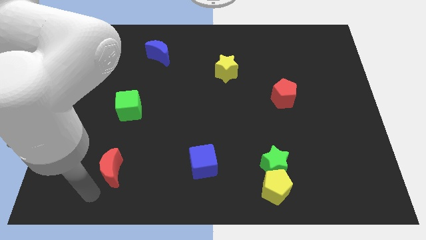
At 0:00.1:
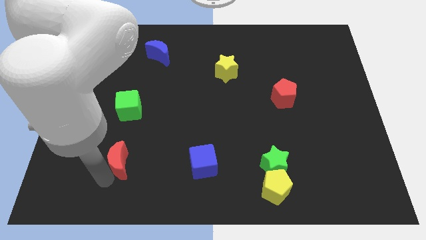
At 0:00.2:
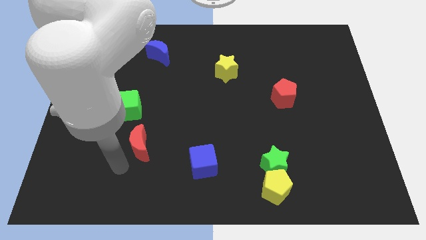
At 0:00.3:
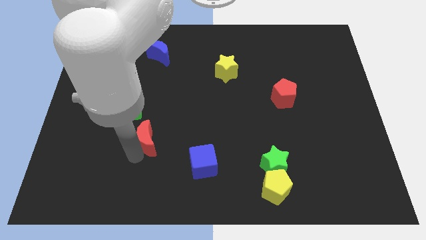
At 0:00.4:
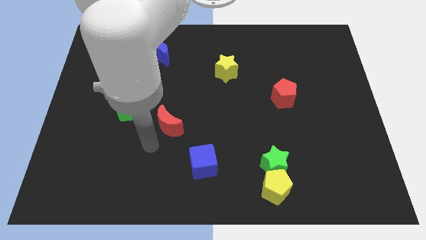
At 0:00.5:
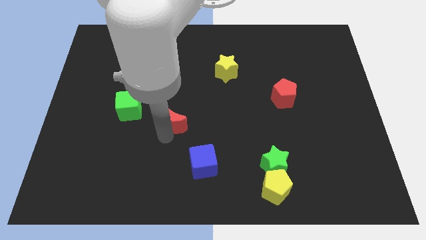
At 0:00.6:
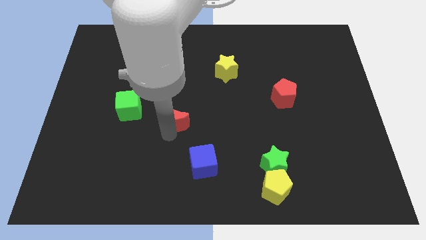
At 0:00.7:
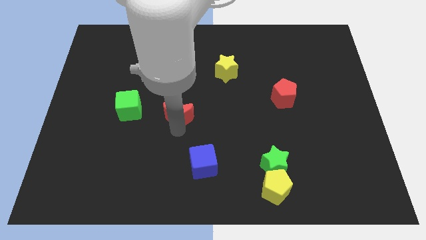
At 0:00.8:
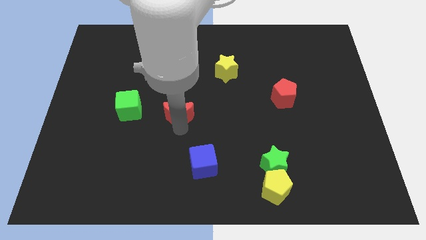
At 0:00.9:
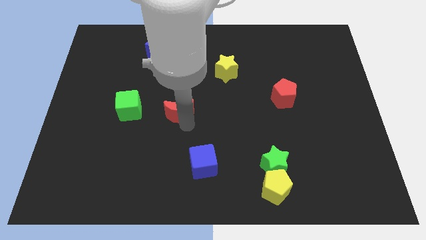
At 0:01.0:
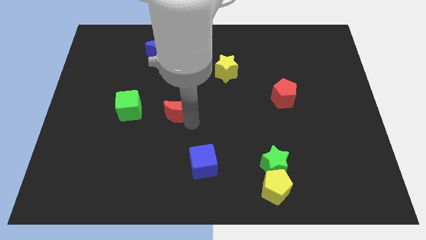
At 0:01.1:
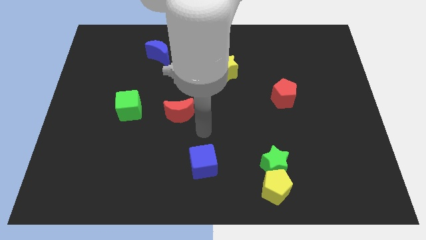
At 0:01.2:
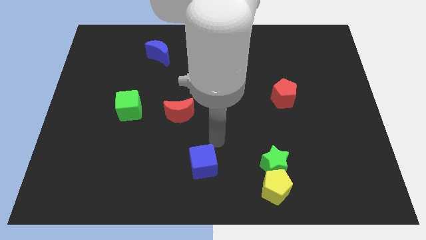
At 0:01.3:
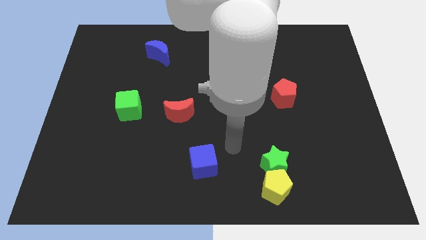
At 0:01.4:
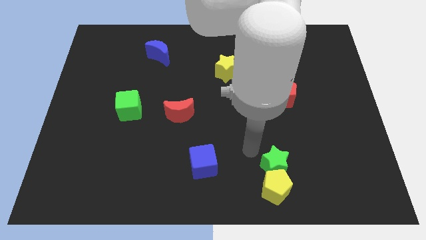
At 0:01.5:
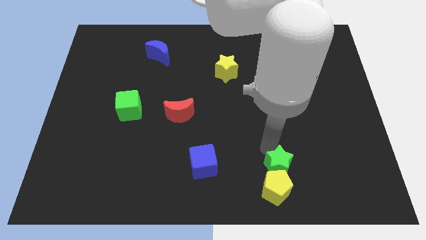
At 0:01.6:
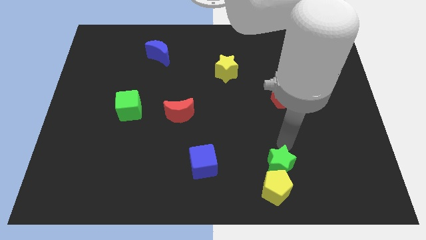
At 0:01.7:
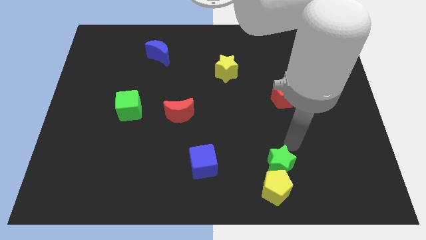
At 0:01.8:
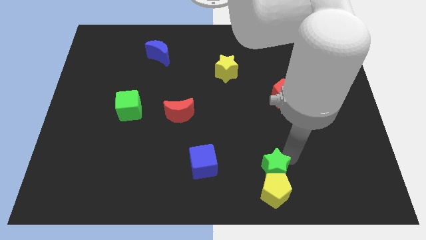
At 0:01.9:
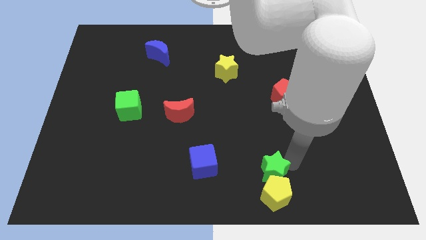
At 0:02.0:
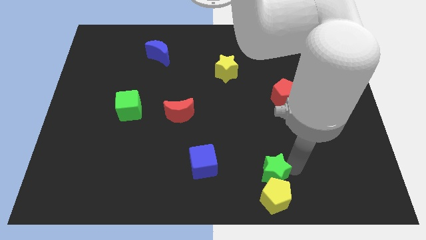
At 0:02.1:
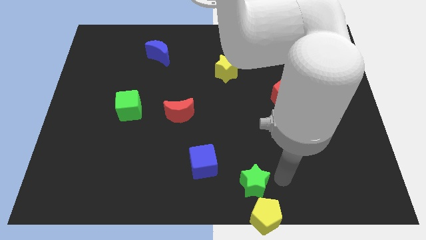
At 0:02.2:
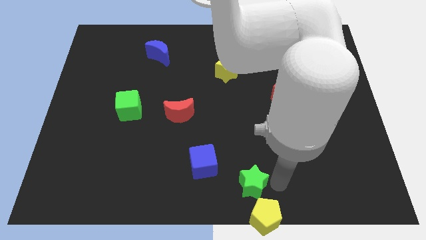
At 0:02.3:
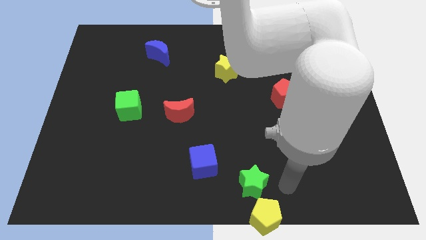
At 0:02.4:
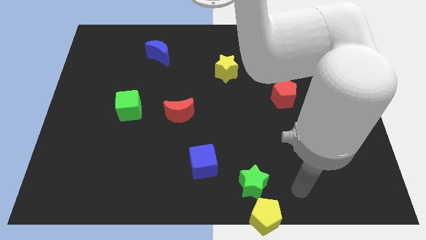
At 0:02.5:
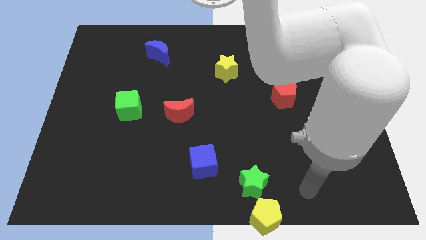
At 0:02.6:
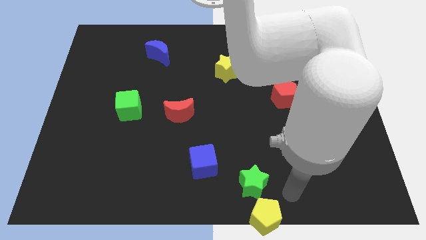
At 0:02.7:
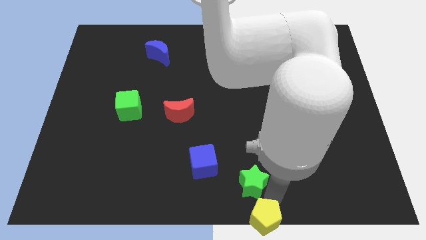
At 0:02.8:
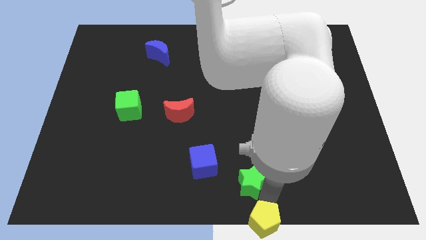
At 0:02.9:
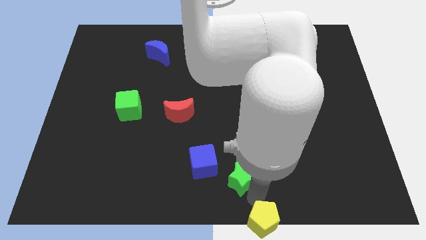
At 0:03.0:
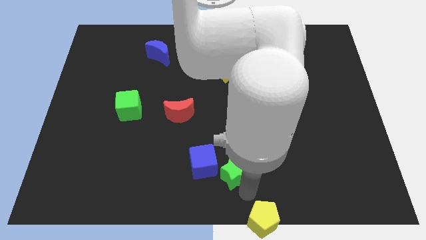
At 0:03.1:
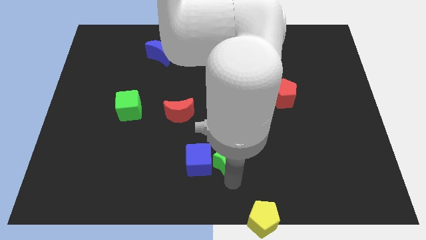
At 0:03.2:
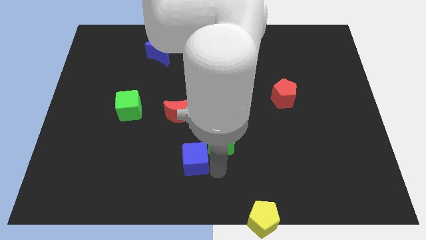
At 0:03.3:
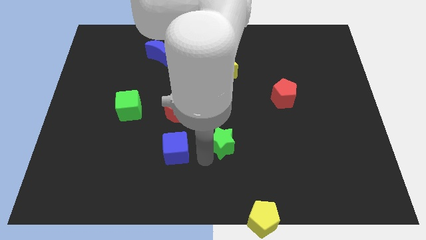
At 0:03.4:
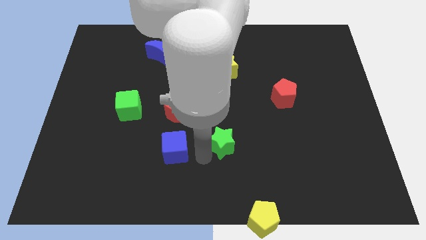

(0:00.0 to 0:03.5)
separate green star and yellow pentagon

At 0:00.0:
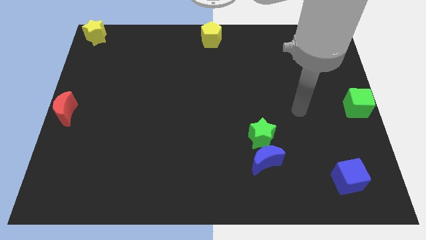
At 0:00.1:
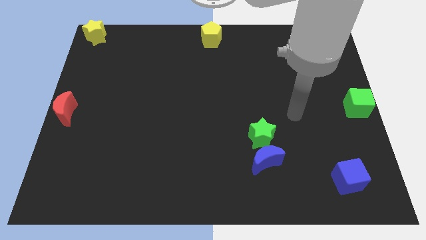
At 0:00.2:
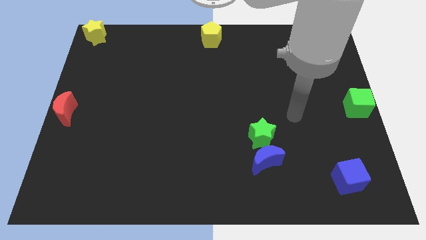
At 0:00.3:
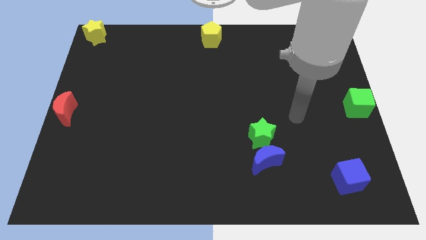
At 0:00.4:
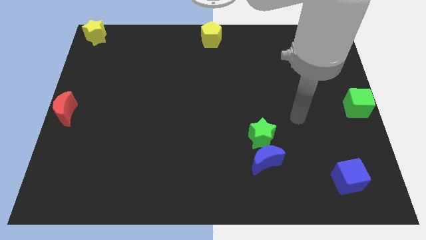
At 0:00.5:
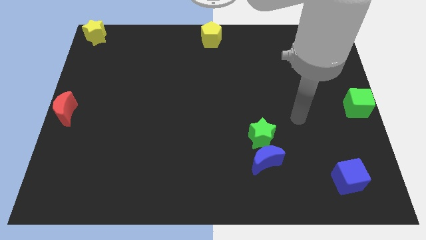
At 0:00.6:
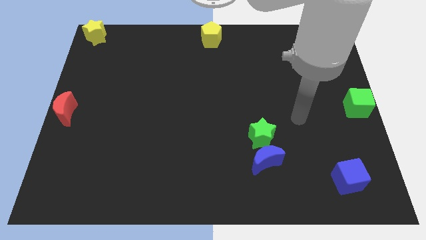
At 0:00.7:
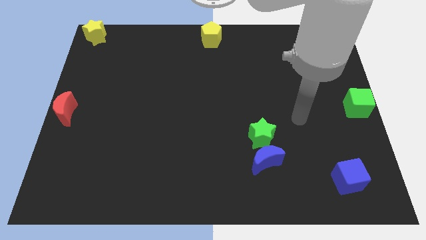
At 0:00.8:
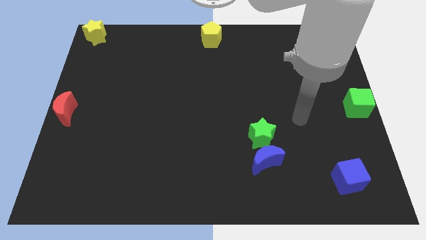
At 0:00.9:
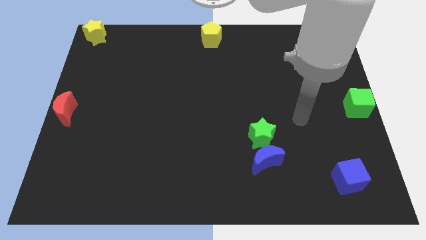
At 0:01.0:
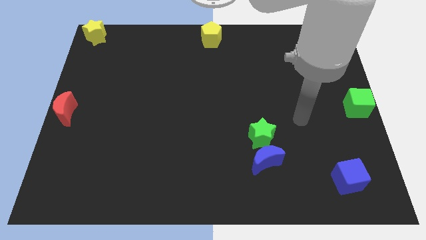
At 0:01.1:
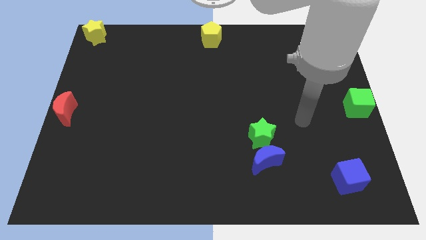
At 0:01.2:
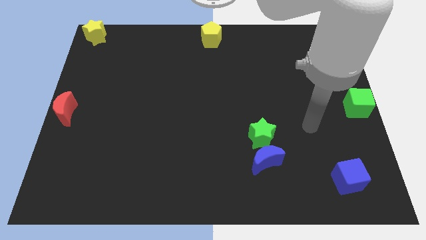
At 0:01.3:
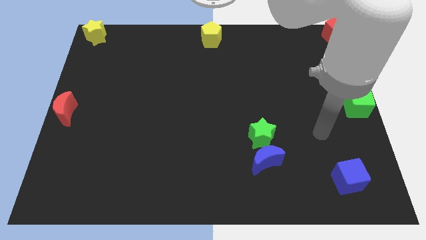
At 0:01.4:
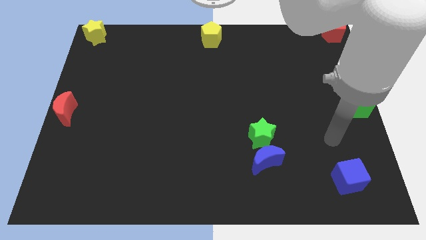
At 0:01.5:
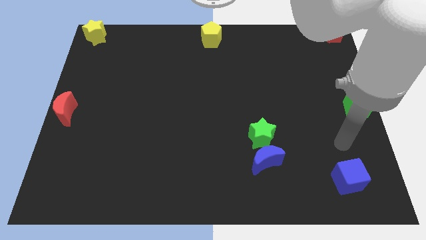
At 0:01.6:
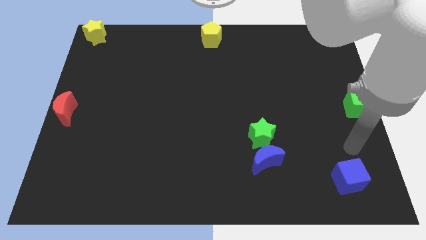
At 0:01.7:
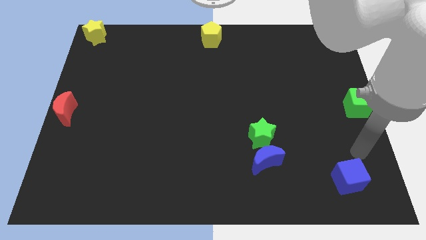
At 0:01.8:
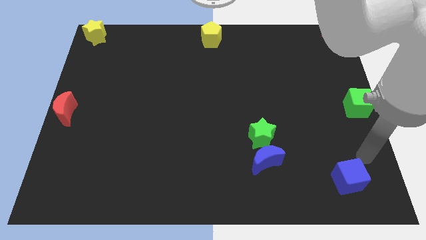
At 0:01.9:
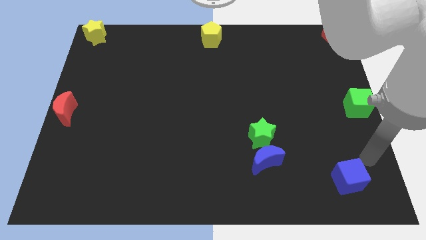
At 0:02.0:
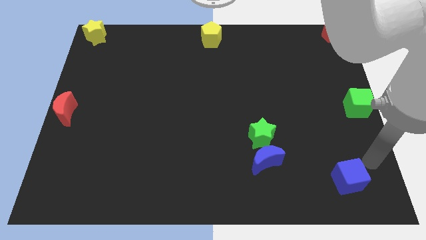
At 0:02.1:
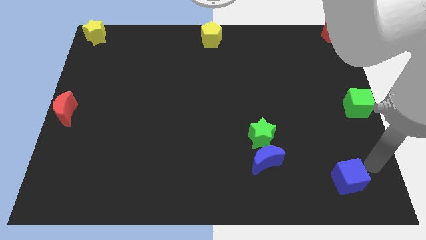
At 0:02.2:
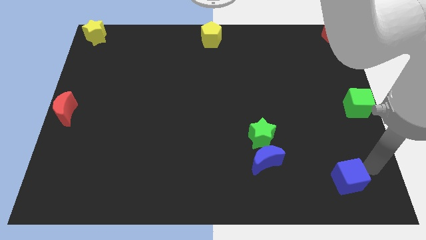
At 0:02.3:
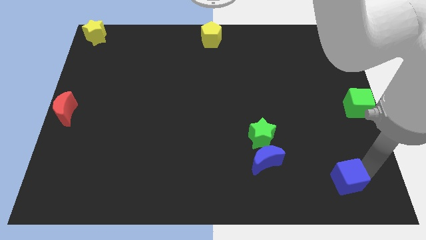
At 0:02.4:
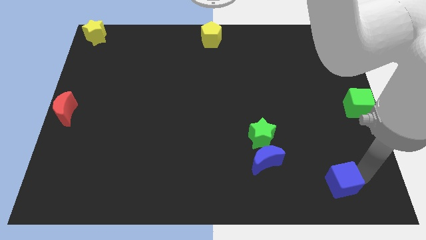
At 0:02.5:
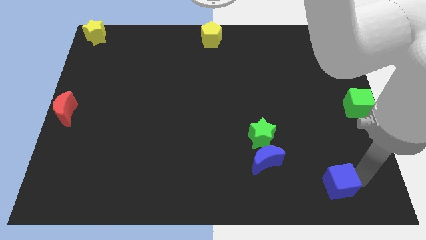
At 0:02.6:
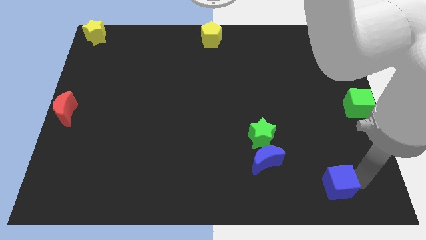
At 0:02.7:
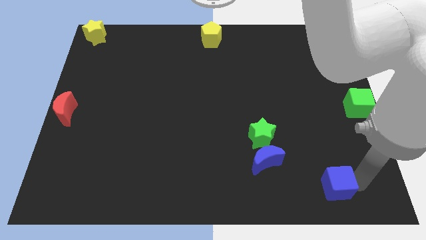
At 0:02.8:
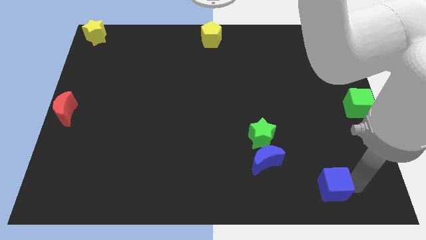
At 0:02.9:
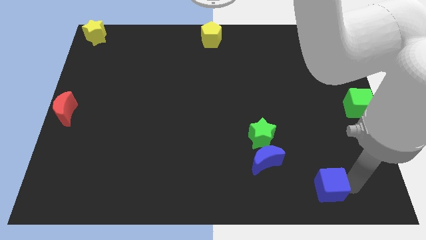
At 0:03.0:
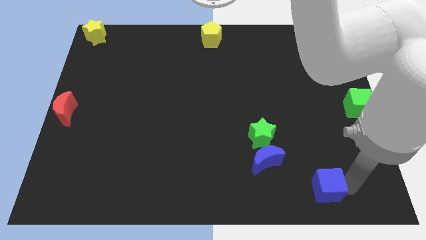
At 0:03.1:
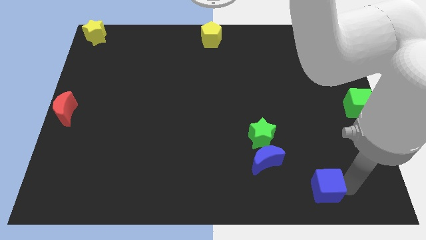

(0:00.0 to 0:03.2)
slightly push the blue cube towards the left

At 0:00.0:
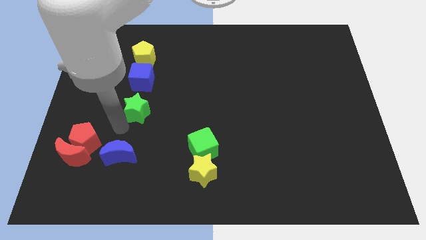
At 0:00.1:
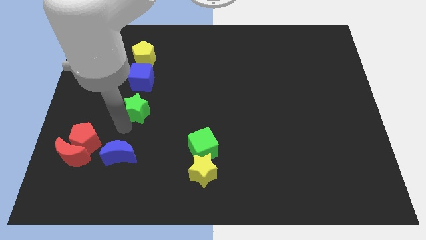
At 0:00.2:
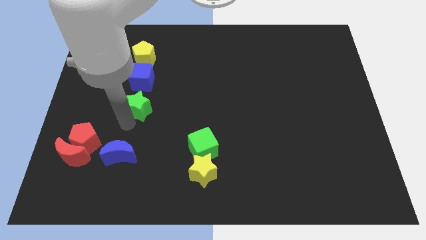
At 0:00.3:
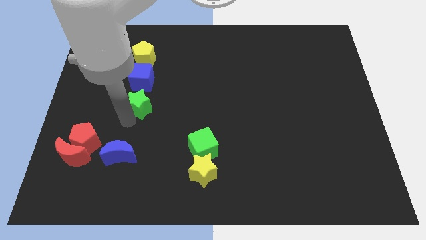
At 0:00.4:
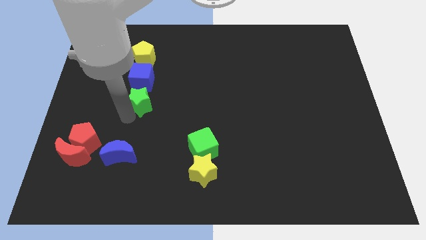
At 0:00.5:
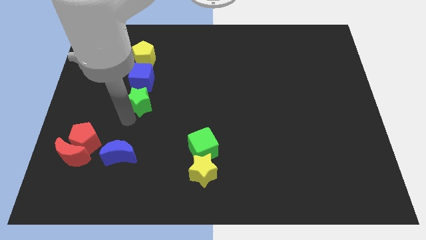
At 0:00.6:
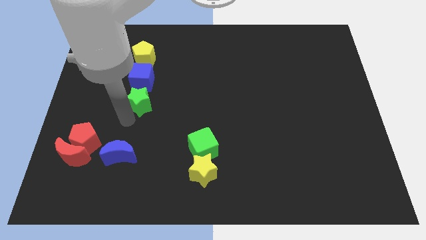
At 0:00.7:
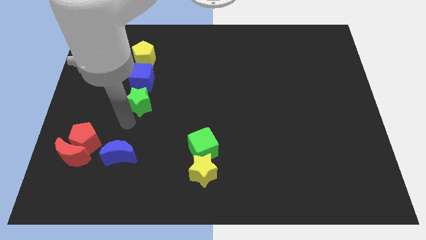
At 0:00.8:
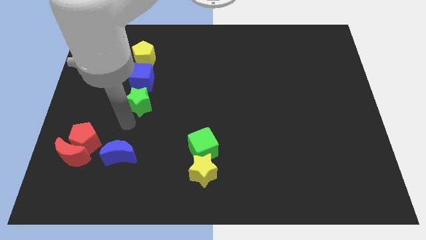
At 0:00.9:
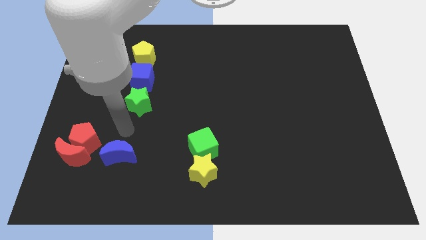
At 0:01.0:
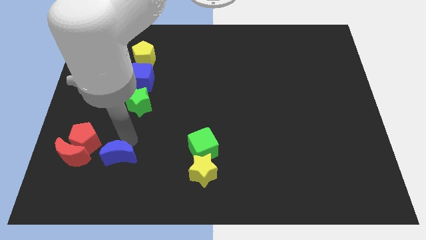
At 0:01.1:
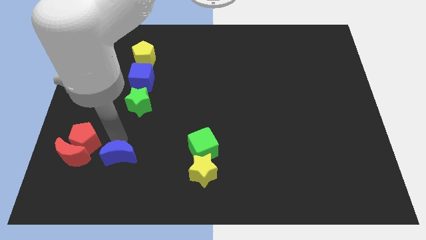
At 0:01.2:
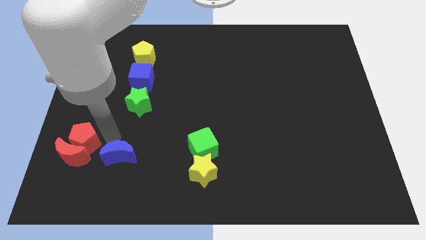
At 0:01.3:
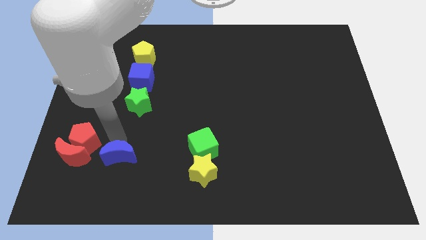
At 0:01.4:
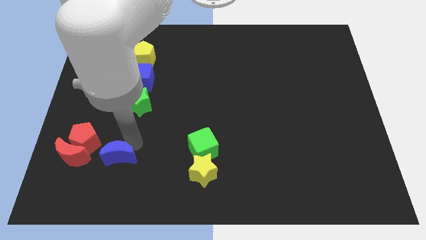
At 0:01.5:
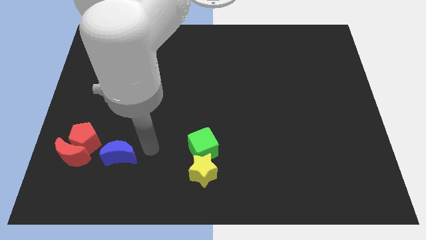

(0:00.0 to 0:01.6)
push your arm near to the blue moon

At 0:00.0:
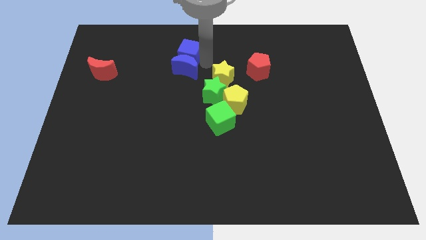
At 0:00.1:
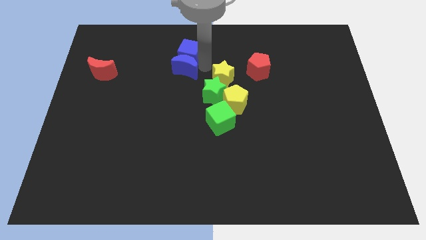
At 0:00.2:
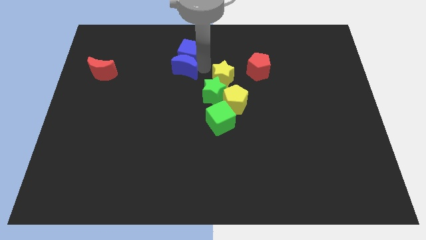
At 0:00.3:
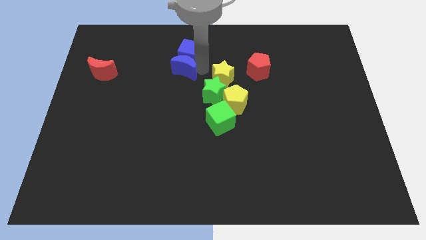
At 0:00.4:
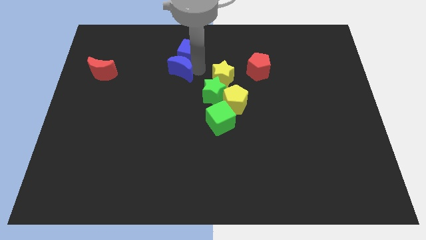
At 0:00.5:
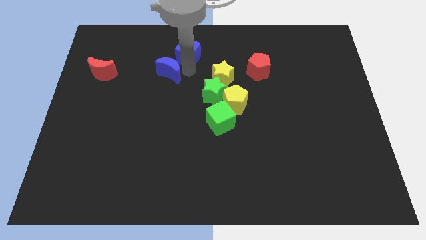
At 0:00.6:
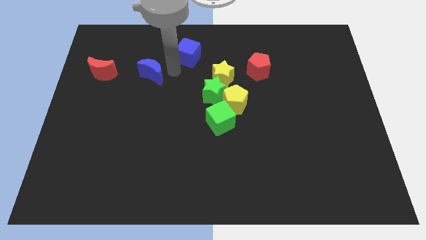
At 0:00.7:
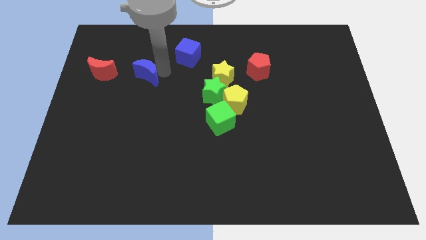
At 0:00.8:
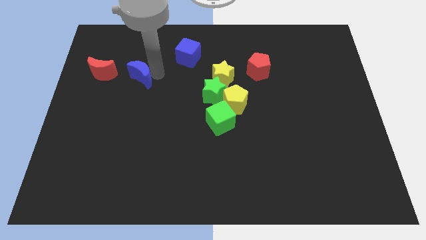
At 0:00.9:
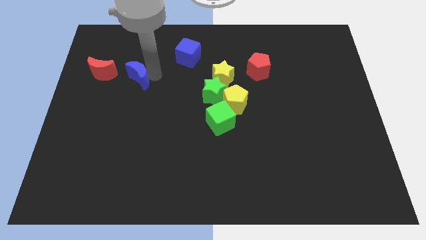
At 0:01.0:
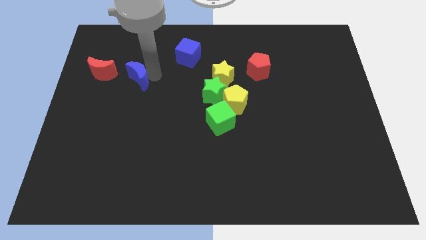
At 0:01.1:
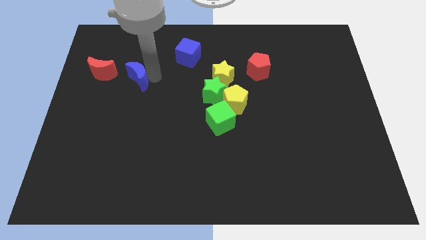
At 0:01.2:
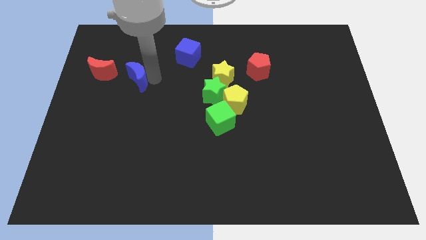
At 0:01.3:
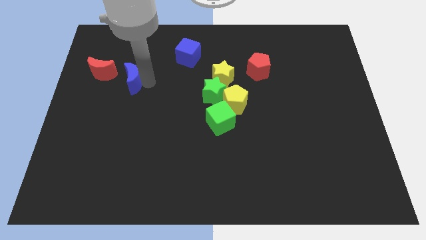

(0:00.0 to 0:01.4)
separate the blue moon from the blue cube
